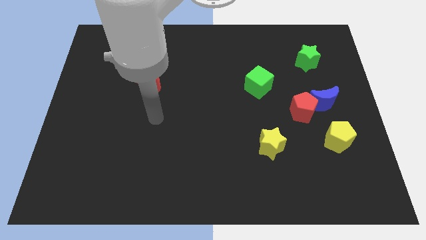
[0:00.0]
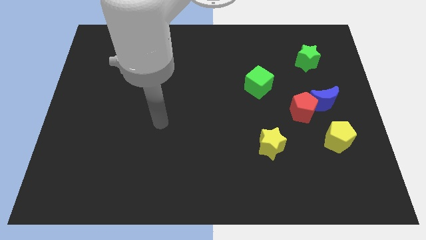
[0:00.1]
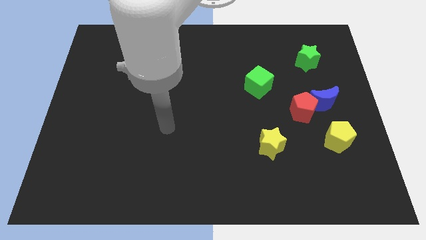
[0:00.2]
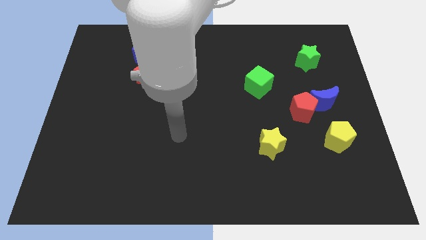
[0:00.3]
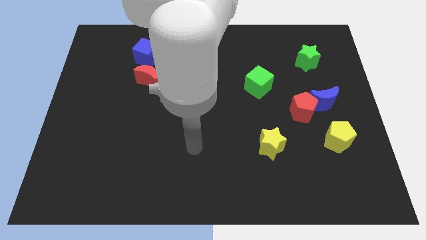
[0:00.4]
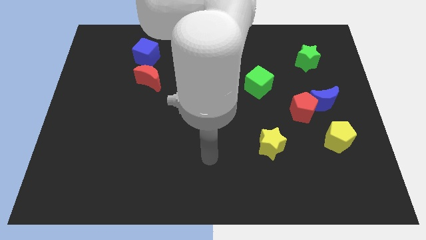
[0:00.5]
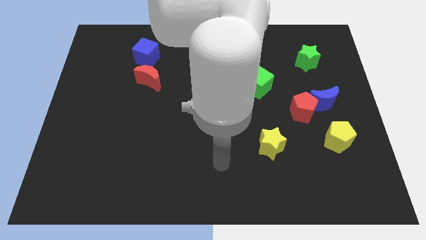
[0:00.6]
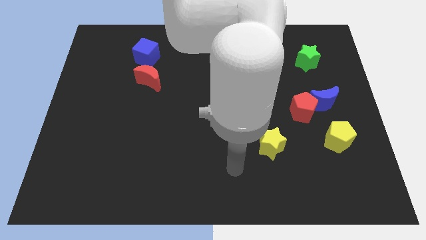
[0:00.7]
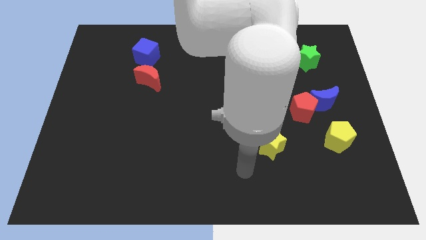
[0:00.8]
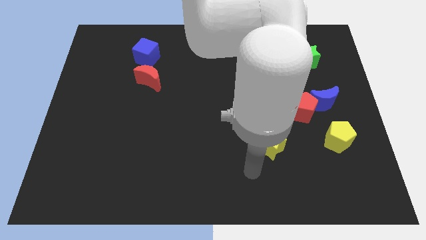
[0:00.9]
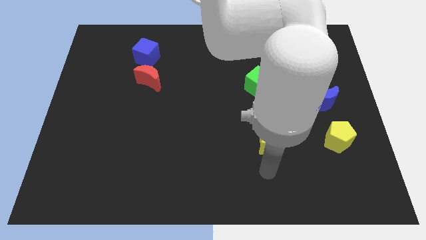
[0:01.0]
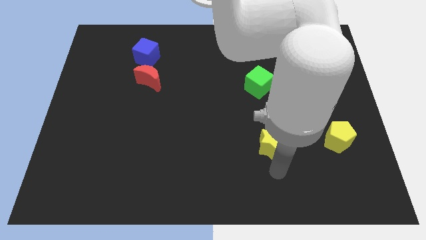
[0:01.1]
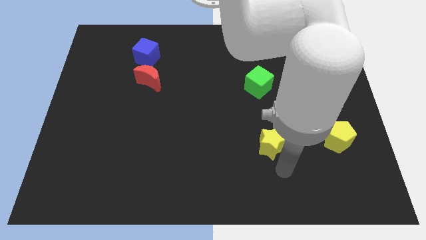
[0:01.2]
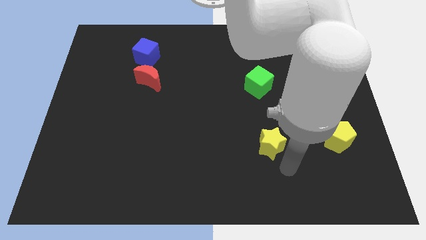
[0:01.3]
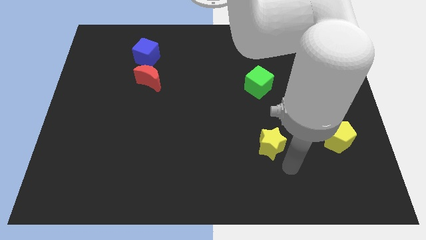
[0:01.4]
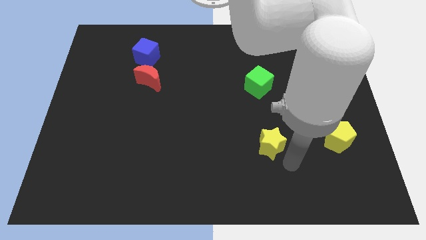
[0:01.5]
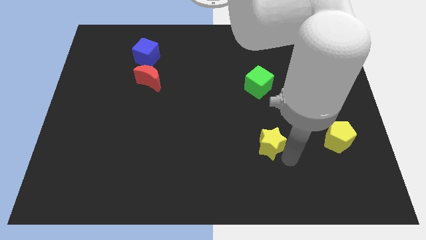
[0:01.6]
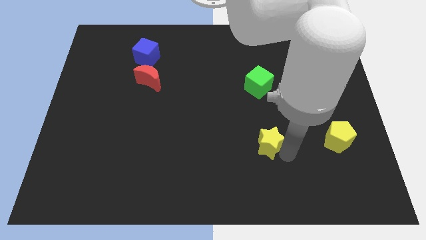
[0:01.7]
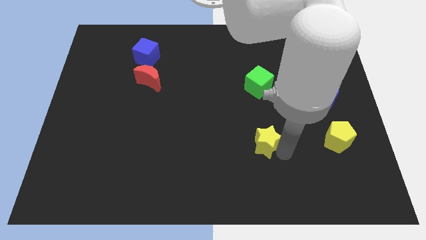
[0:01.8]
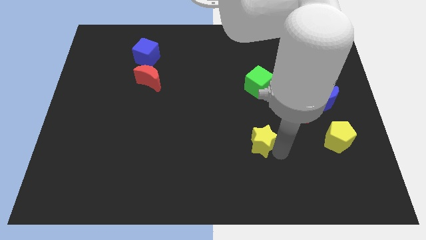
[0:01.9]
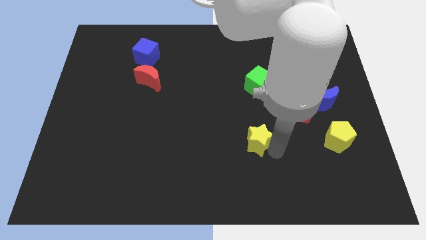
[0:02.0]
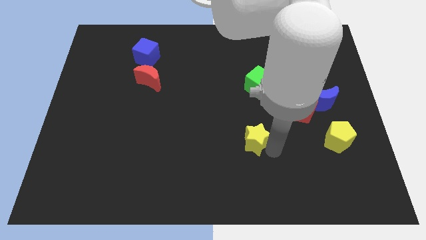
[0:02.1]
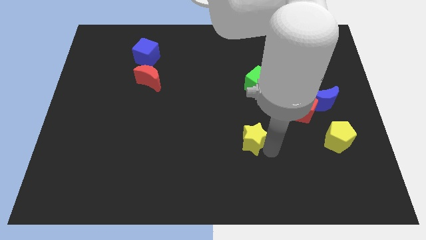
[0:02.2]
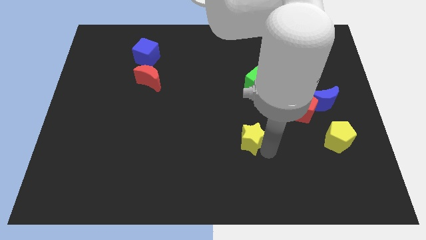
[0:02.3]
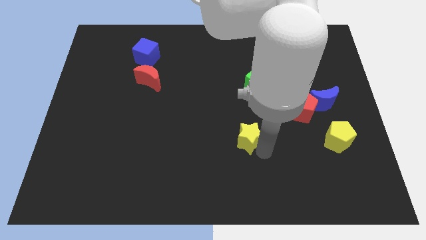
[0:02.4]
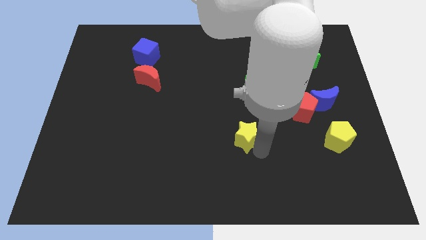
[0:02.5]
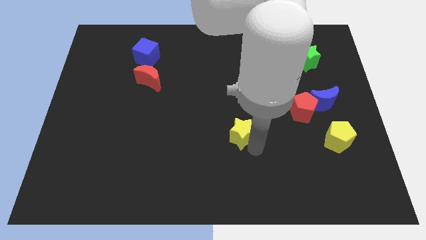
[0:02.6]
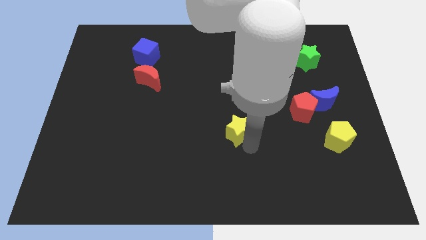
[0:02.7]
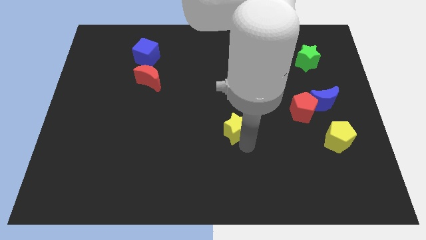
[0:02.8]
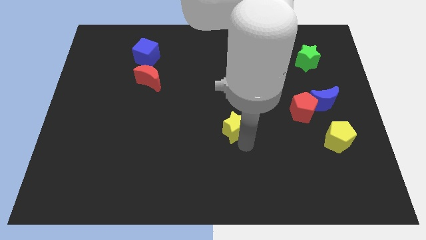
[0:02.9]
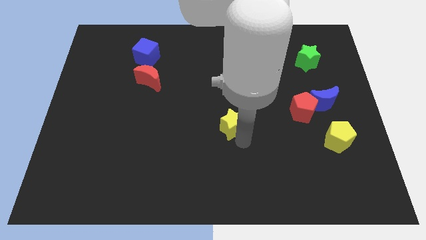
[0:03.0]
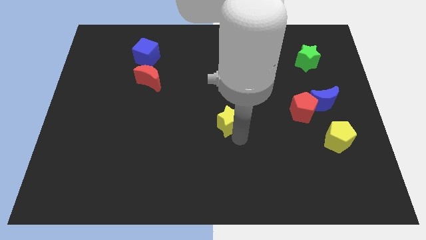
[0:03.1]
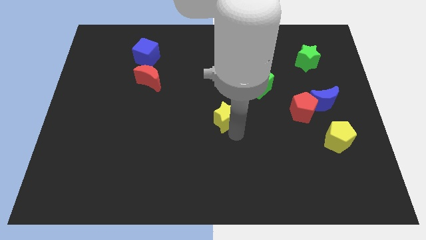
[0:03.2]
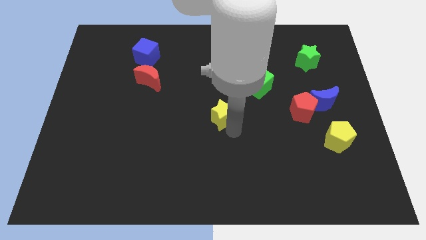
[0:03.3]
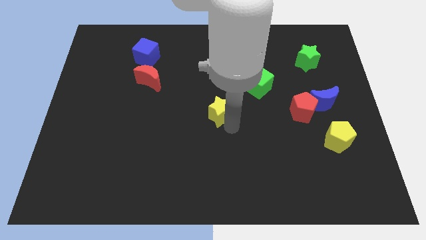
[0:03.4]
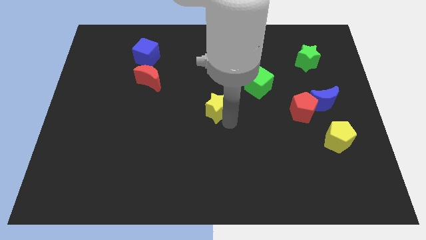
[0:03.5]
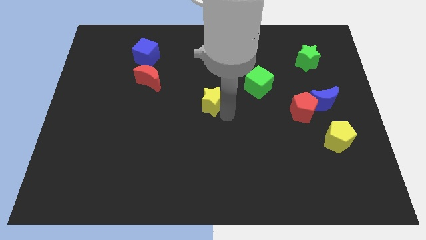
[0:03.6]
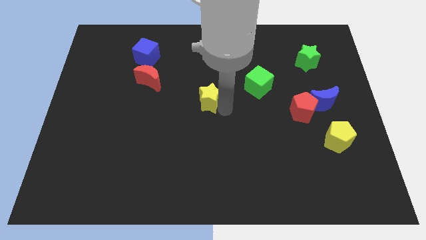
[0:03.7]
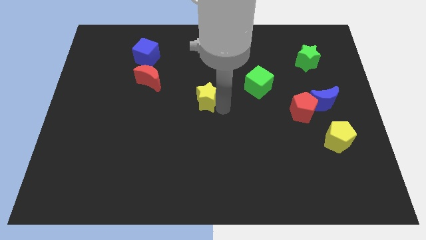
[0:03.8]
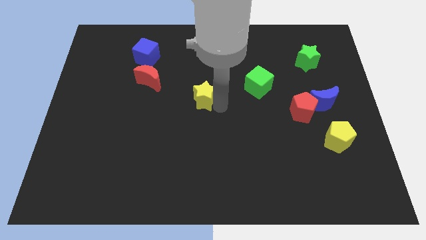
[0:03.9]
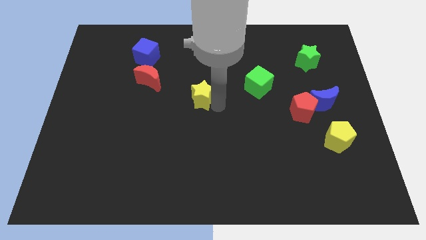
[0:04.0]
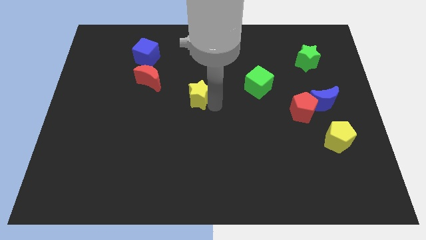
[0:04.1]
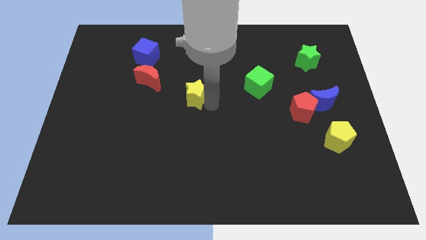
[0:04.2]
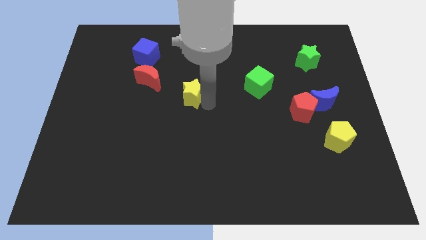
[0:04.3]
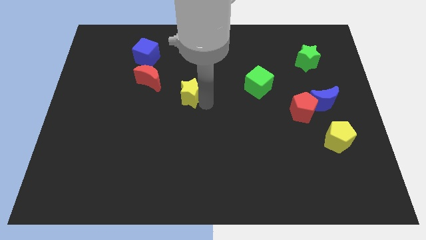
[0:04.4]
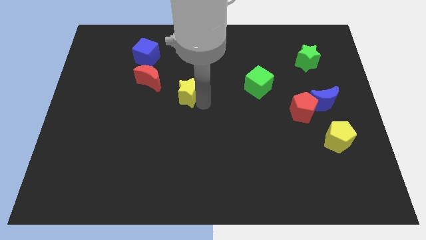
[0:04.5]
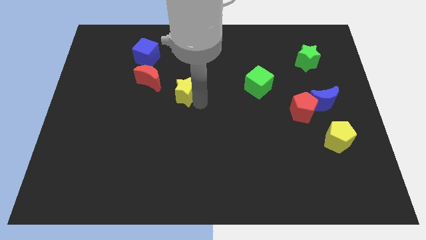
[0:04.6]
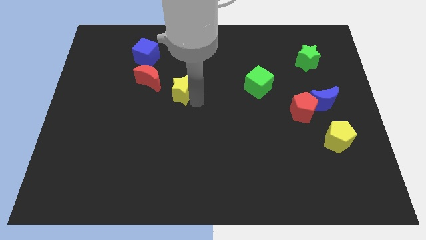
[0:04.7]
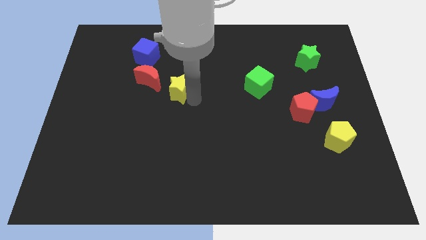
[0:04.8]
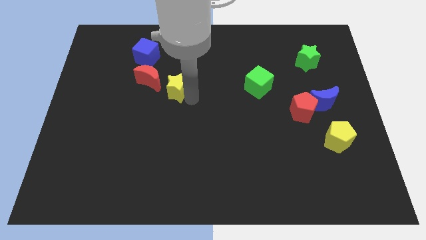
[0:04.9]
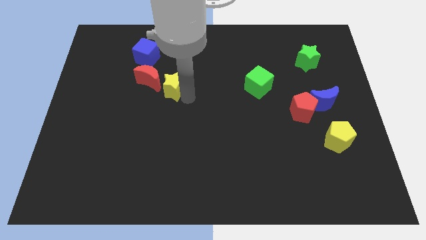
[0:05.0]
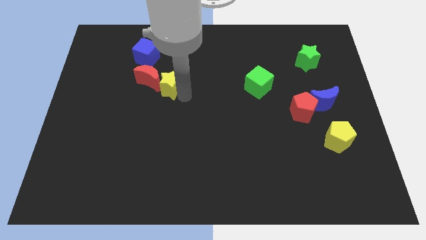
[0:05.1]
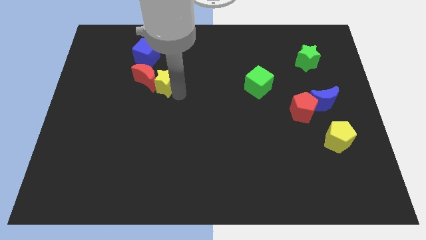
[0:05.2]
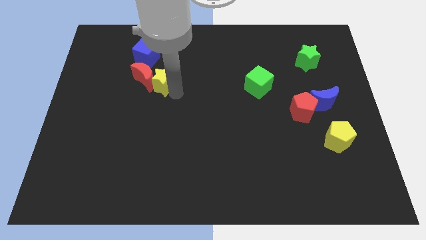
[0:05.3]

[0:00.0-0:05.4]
move the yellow star towards the red moon

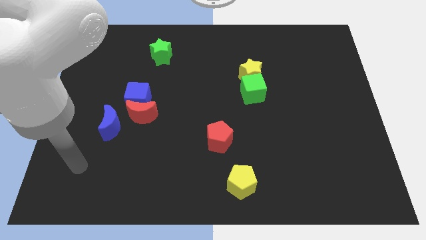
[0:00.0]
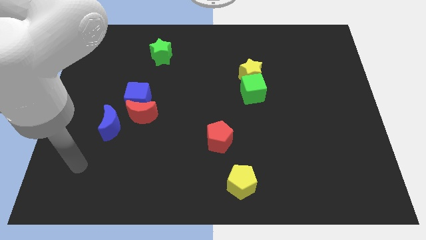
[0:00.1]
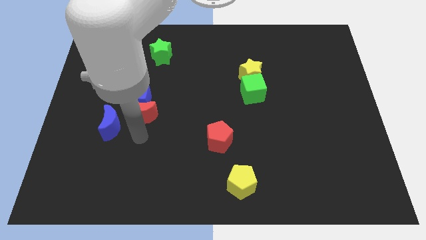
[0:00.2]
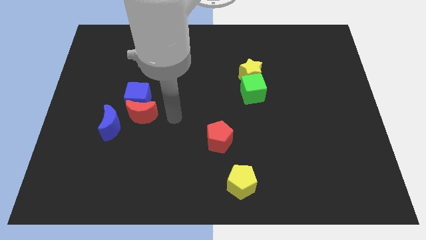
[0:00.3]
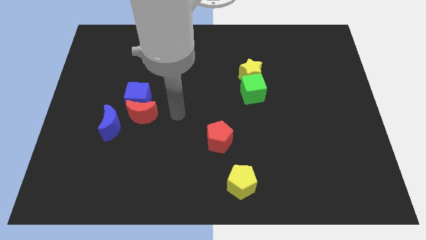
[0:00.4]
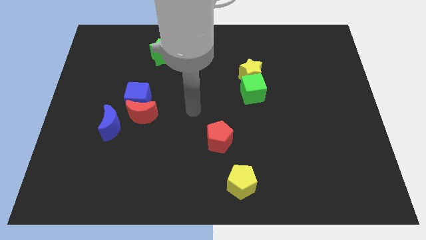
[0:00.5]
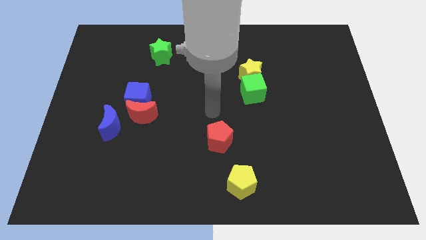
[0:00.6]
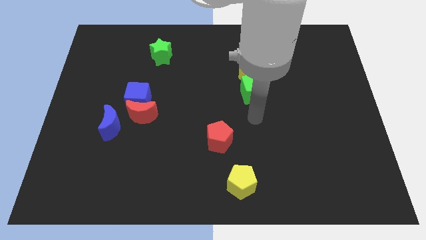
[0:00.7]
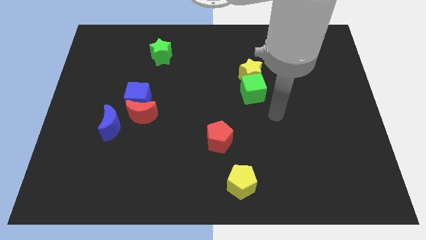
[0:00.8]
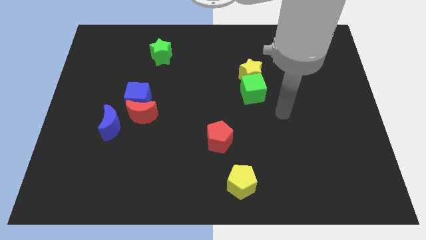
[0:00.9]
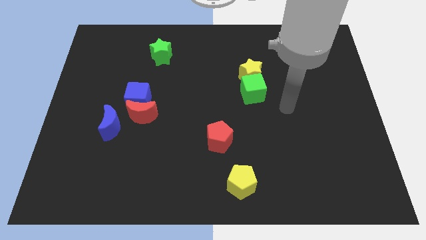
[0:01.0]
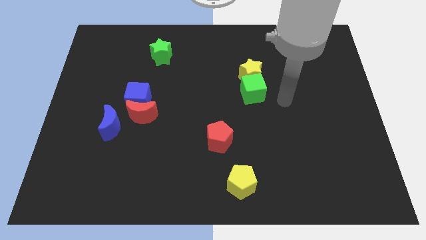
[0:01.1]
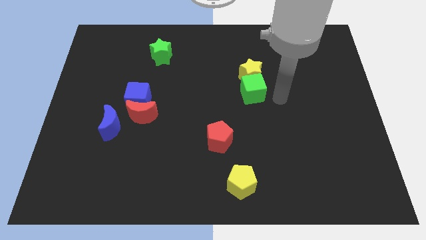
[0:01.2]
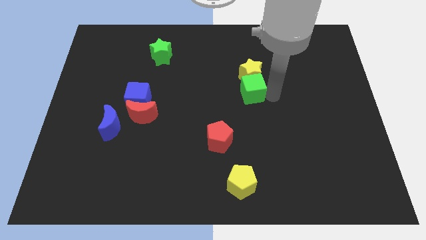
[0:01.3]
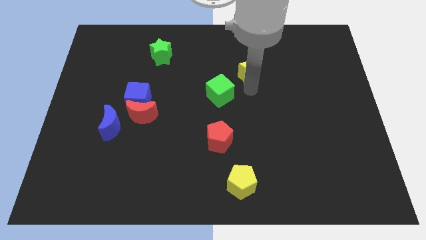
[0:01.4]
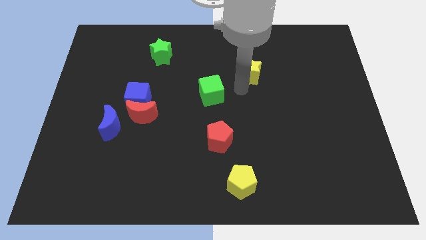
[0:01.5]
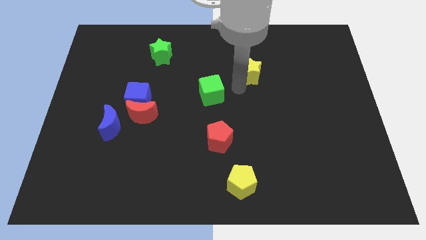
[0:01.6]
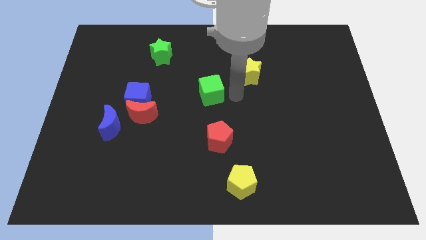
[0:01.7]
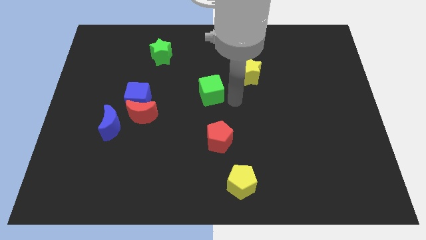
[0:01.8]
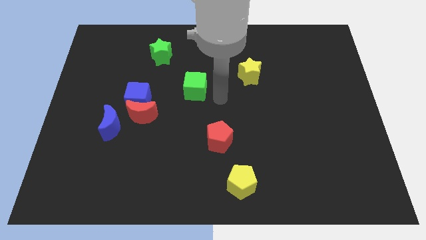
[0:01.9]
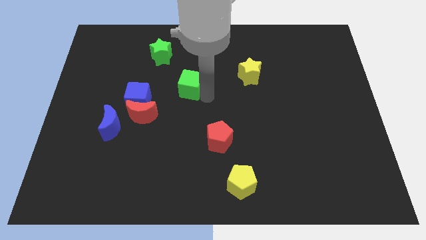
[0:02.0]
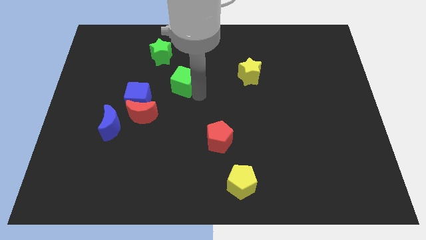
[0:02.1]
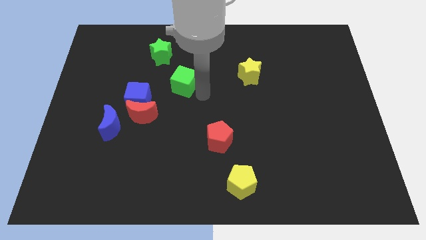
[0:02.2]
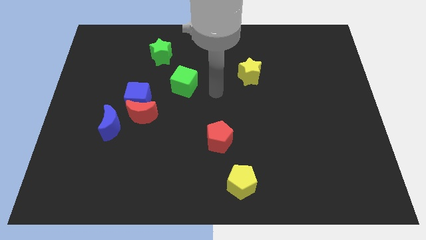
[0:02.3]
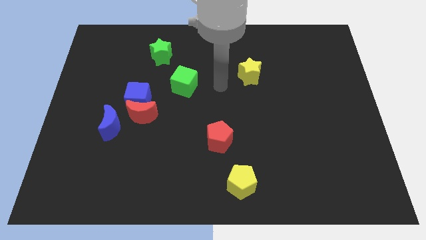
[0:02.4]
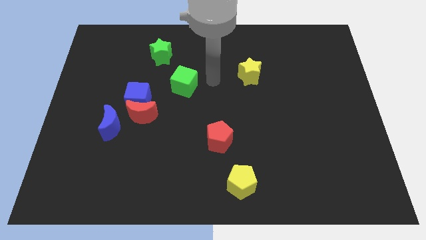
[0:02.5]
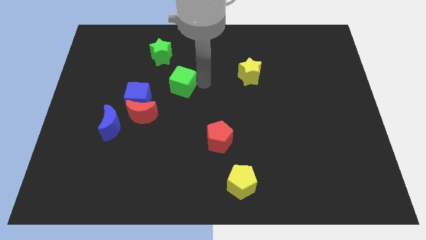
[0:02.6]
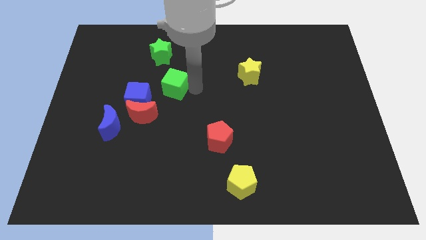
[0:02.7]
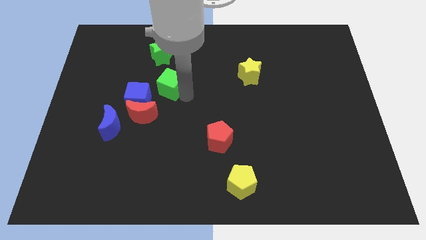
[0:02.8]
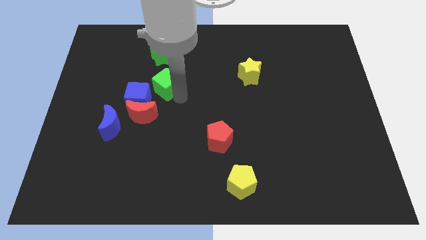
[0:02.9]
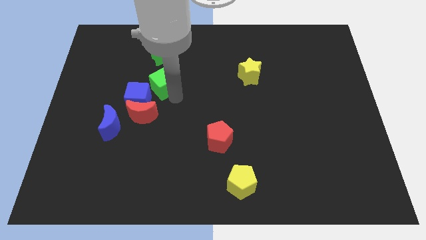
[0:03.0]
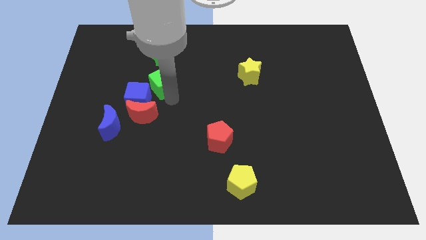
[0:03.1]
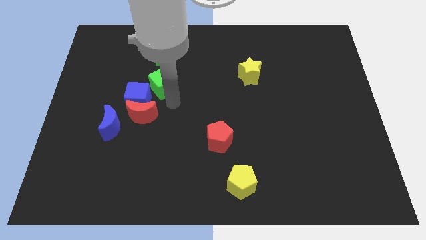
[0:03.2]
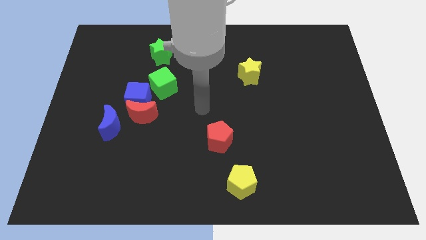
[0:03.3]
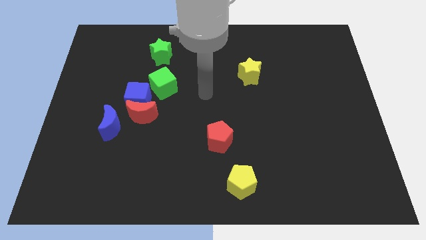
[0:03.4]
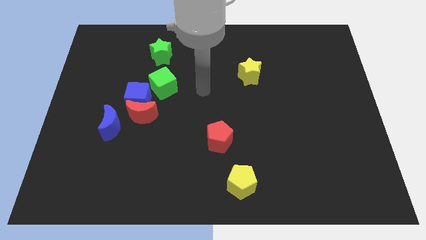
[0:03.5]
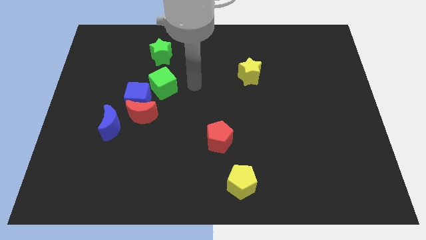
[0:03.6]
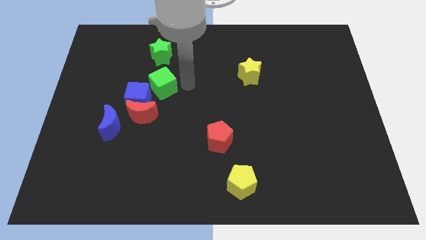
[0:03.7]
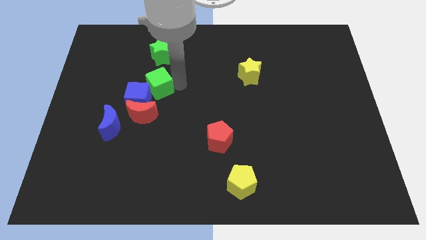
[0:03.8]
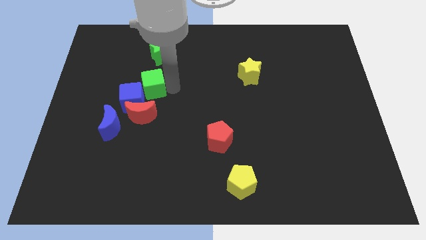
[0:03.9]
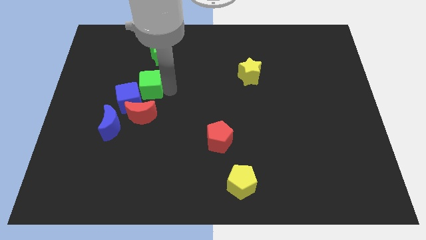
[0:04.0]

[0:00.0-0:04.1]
put the green cube to the blue cube
